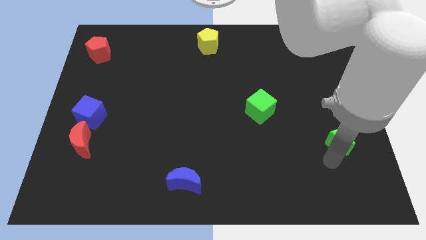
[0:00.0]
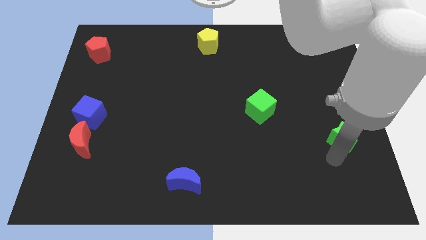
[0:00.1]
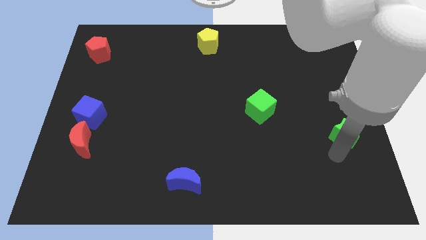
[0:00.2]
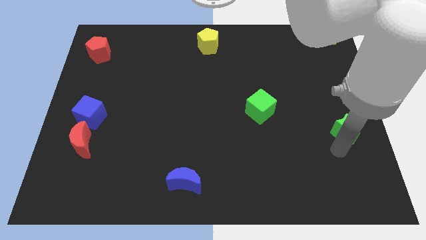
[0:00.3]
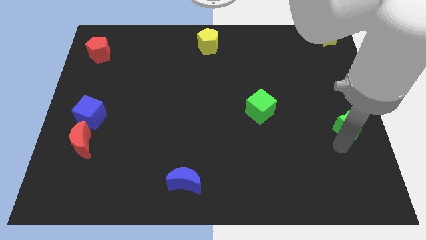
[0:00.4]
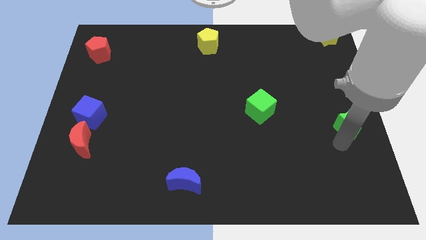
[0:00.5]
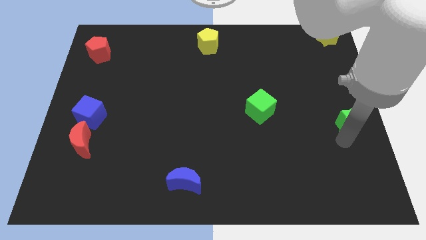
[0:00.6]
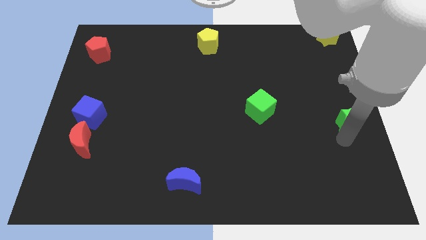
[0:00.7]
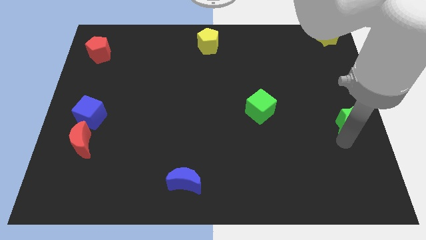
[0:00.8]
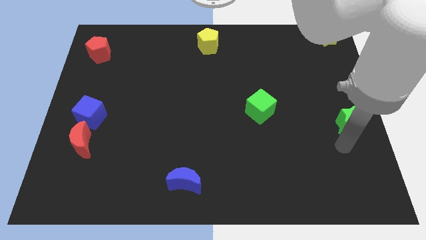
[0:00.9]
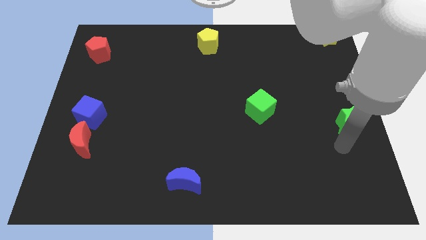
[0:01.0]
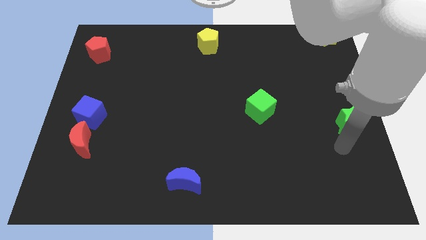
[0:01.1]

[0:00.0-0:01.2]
push green star slightly upwards

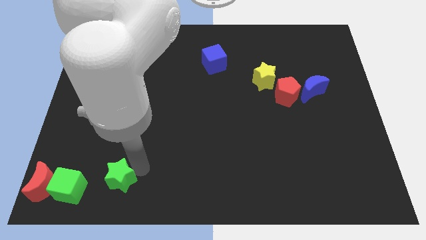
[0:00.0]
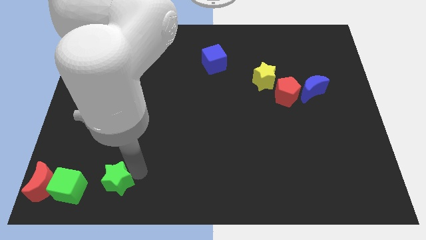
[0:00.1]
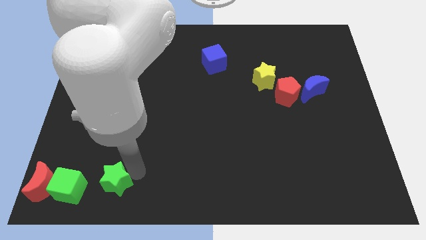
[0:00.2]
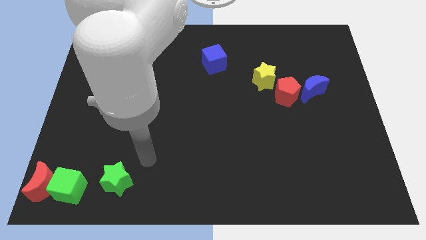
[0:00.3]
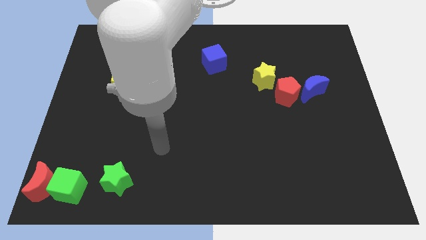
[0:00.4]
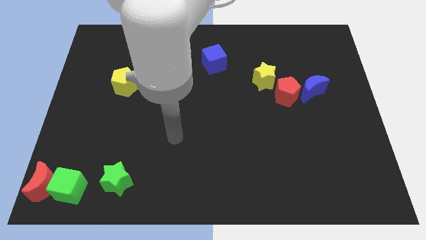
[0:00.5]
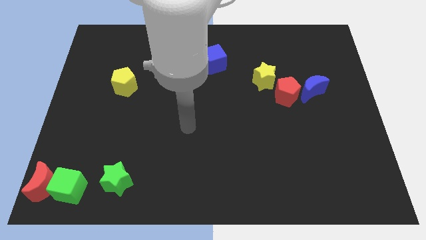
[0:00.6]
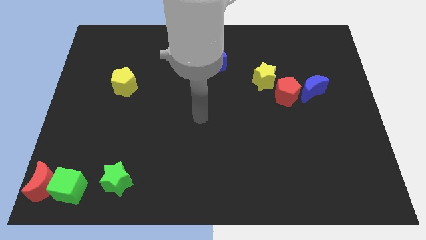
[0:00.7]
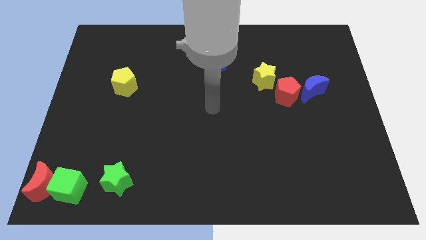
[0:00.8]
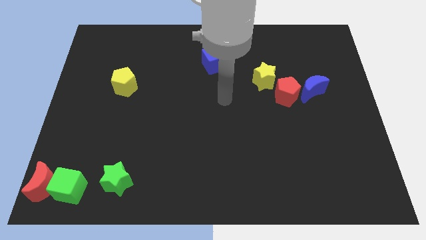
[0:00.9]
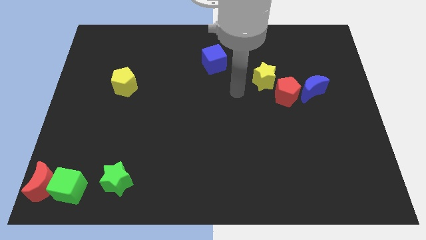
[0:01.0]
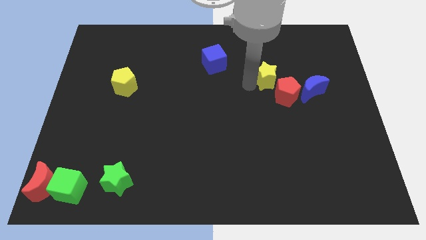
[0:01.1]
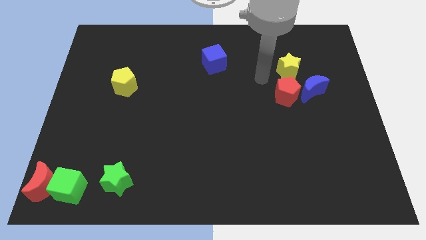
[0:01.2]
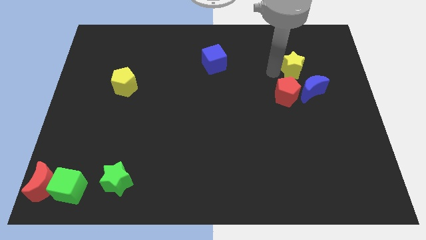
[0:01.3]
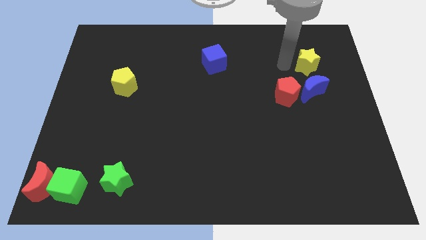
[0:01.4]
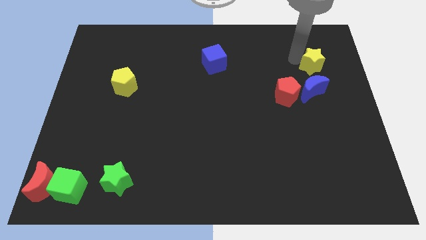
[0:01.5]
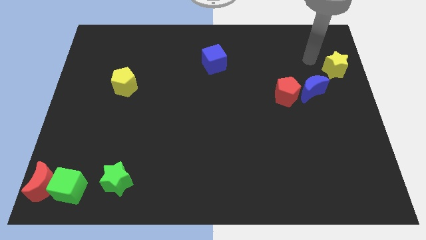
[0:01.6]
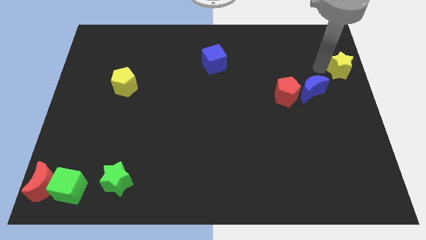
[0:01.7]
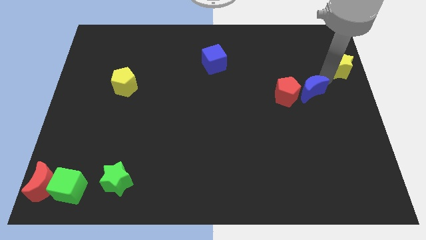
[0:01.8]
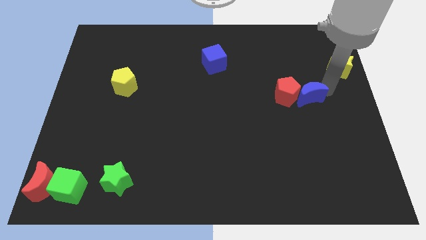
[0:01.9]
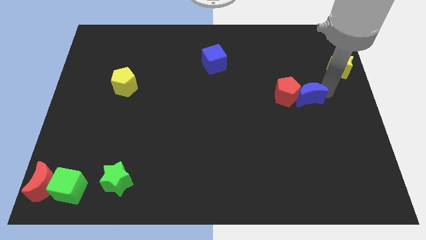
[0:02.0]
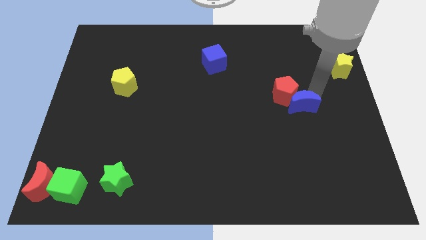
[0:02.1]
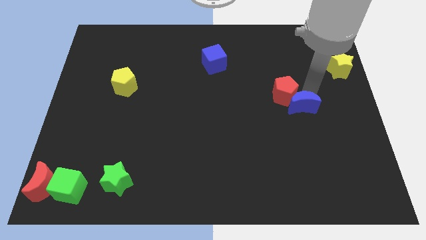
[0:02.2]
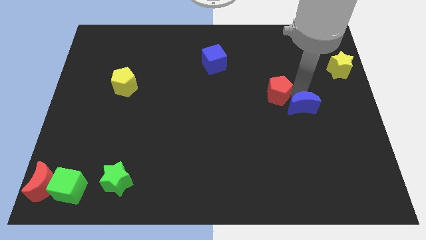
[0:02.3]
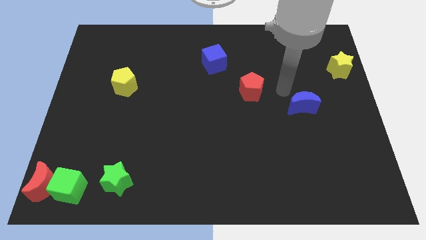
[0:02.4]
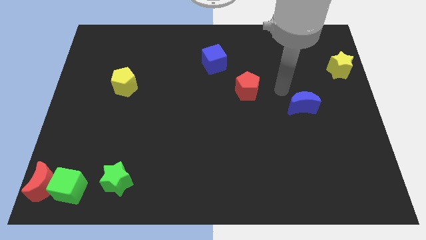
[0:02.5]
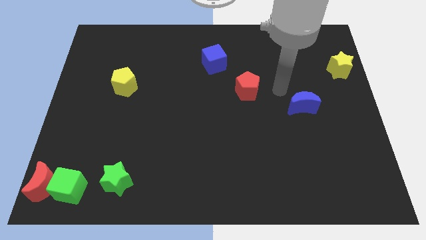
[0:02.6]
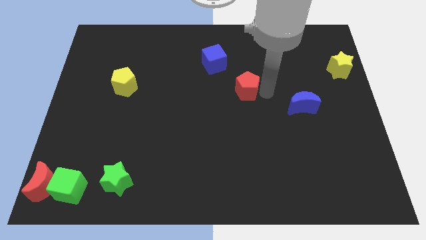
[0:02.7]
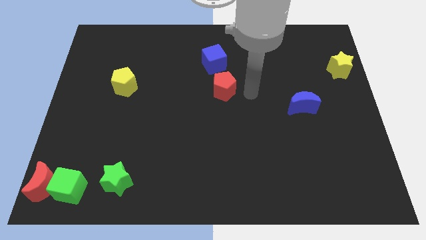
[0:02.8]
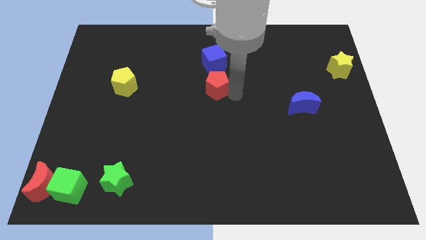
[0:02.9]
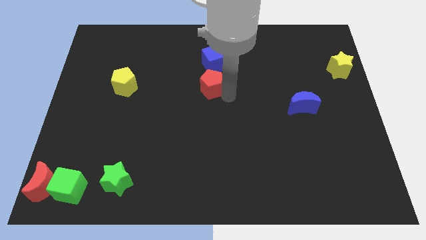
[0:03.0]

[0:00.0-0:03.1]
separate the yellow star from the red pentagon

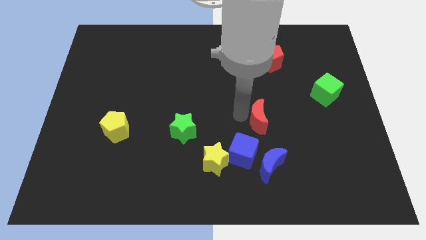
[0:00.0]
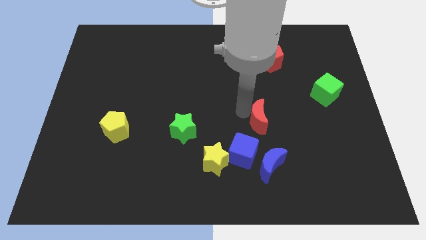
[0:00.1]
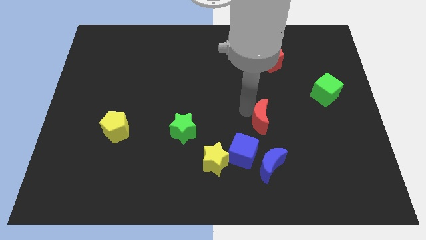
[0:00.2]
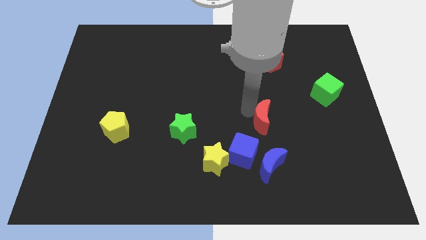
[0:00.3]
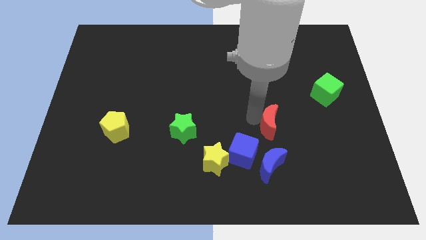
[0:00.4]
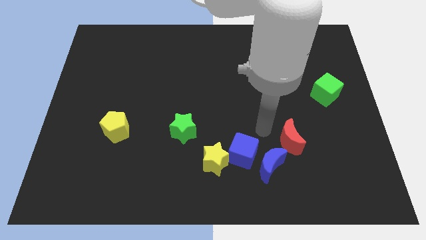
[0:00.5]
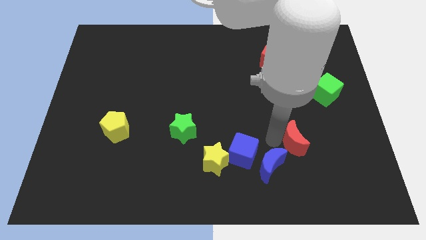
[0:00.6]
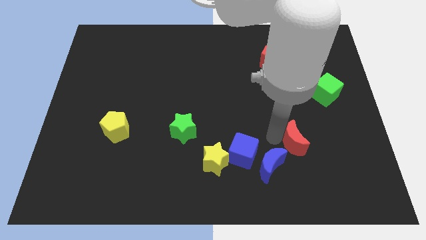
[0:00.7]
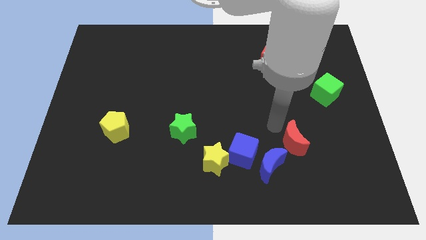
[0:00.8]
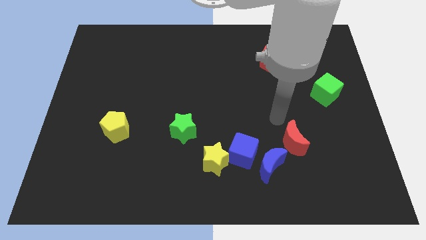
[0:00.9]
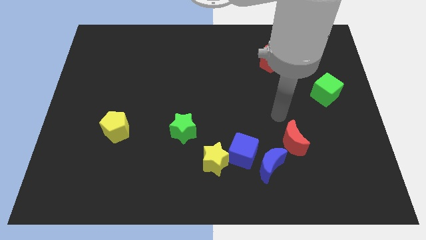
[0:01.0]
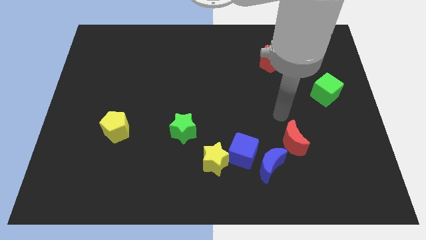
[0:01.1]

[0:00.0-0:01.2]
push the red crescent diagnol to the blue crescent

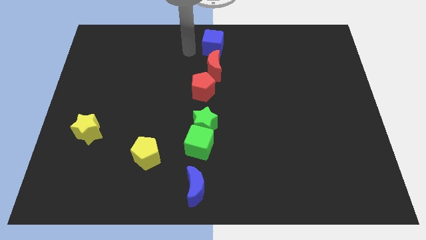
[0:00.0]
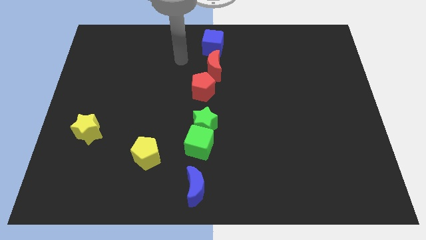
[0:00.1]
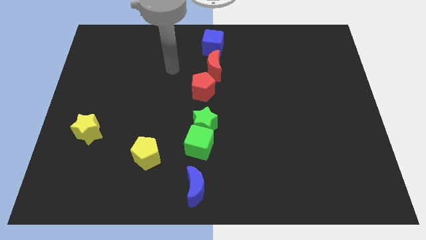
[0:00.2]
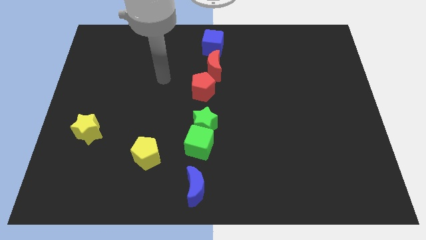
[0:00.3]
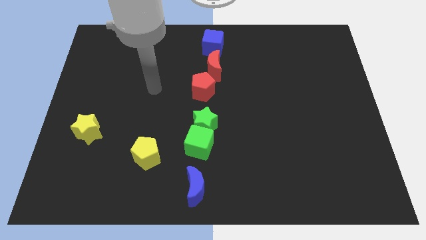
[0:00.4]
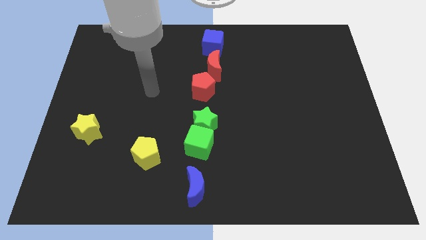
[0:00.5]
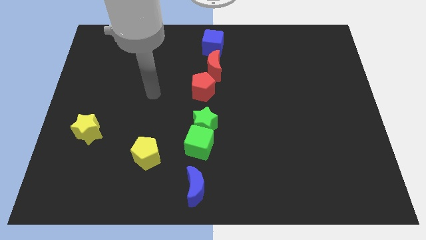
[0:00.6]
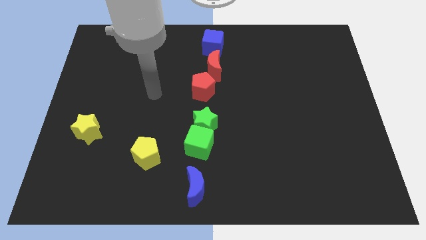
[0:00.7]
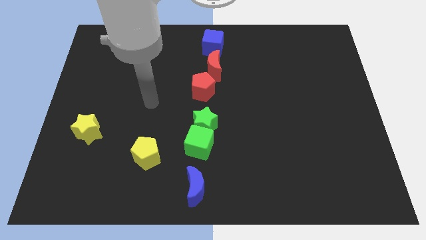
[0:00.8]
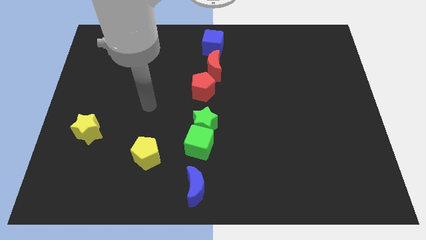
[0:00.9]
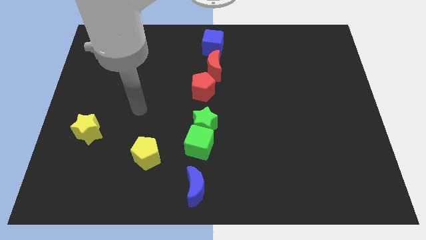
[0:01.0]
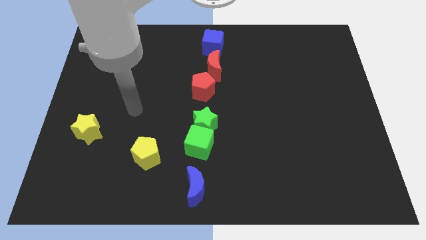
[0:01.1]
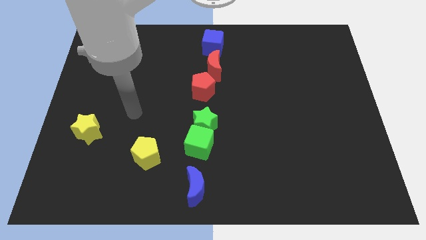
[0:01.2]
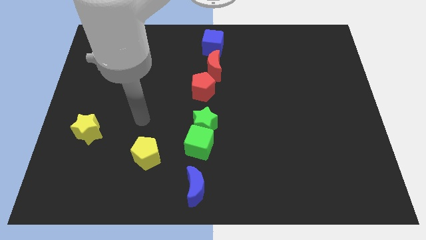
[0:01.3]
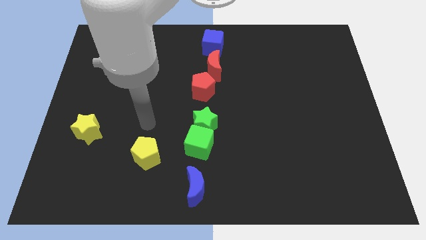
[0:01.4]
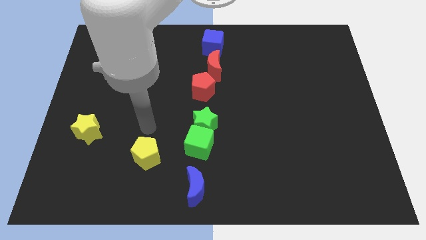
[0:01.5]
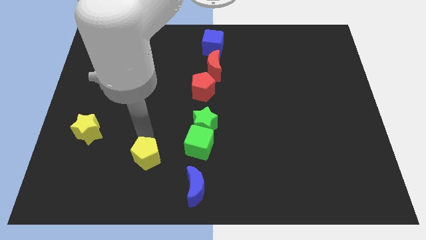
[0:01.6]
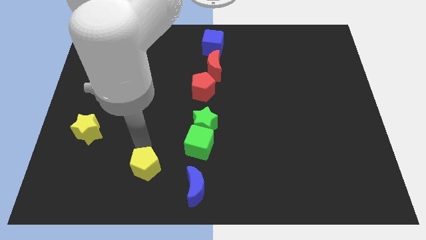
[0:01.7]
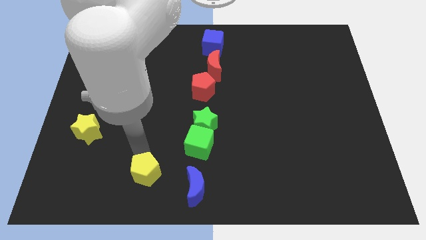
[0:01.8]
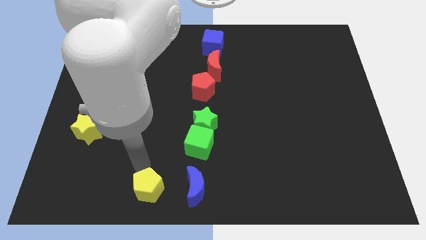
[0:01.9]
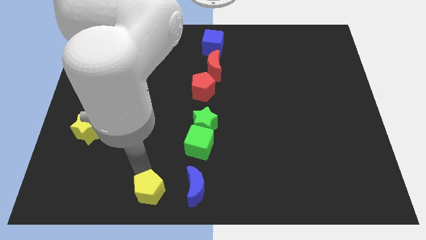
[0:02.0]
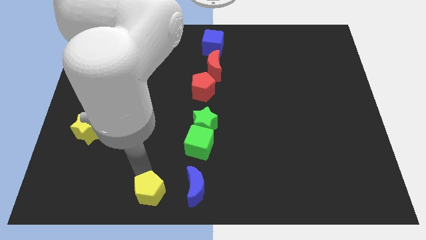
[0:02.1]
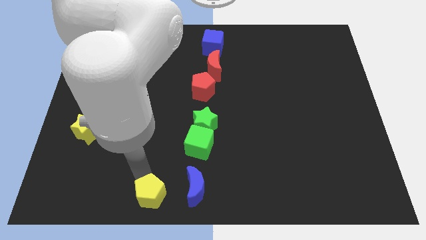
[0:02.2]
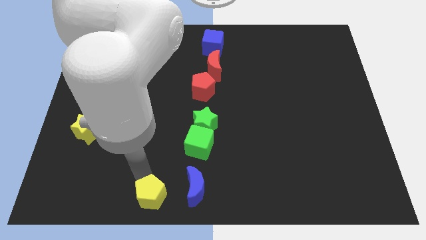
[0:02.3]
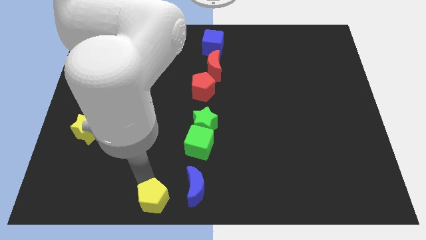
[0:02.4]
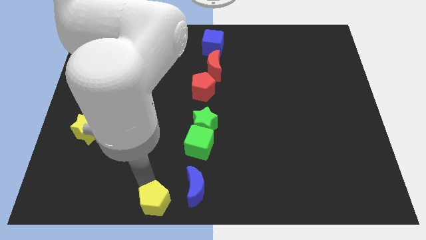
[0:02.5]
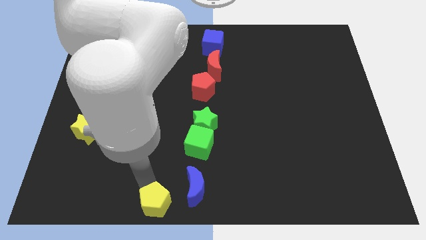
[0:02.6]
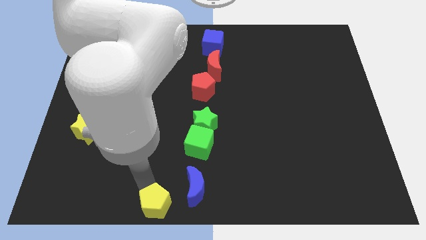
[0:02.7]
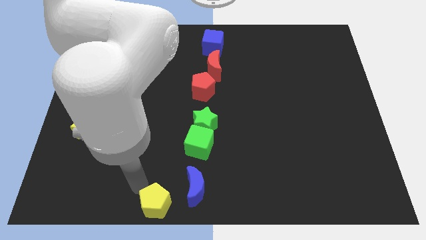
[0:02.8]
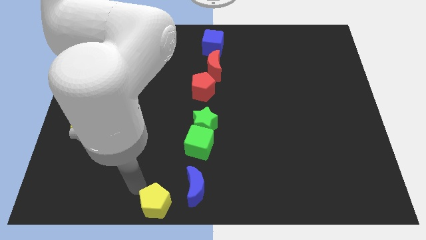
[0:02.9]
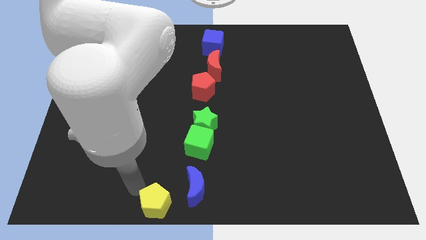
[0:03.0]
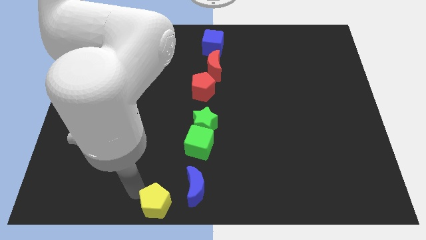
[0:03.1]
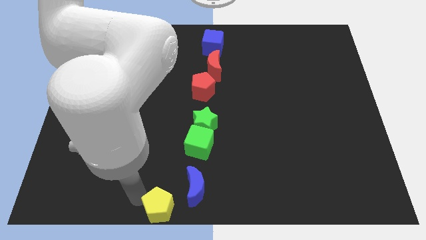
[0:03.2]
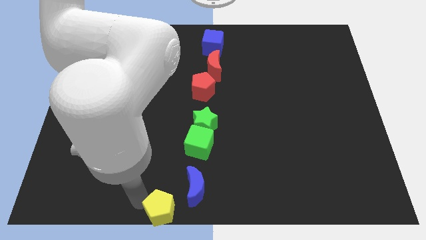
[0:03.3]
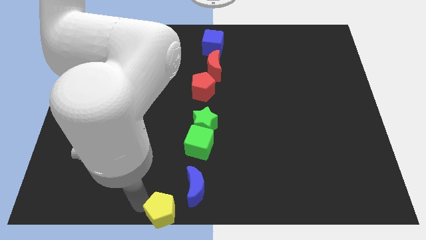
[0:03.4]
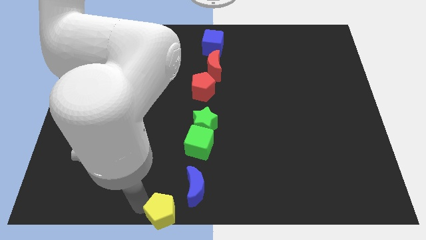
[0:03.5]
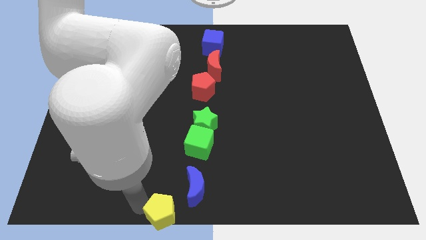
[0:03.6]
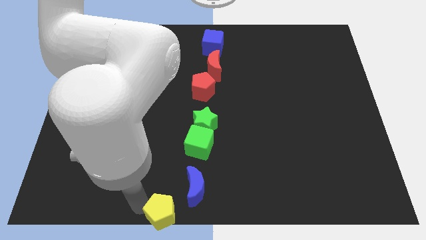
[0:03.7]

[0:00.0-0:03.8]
move the yellow pentagon to the bottom of the board
